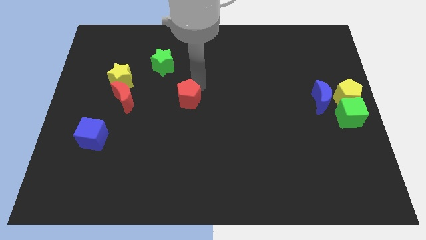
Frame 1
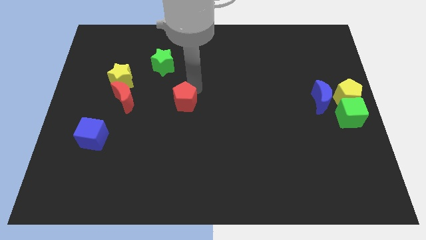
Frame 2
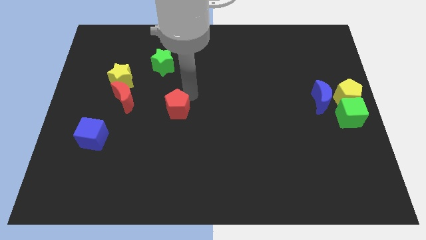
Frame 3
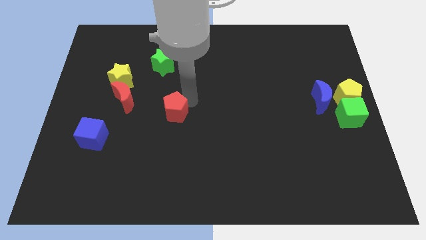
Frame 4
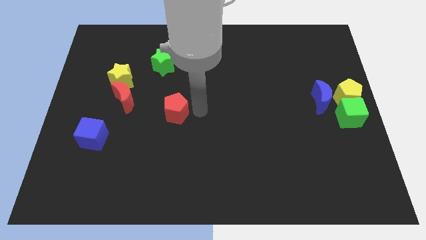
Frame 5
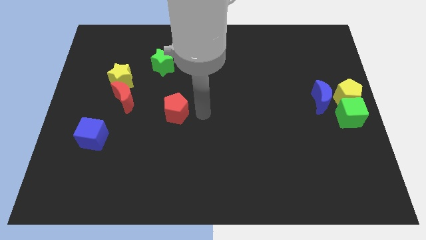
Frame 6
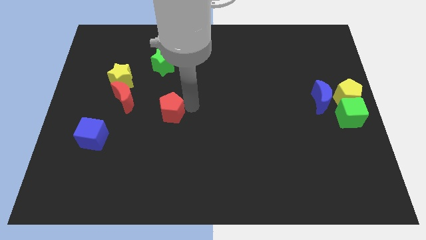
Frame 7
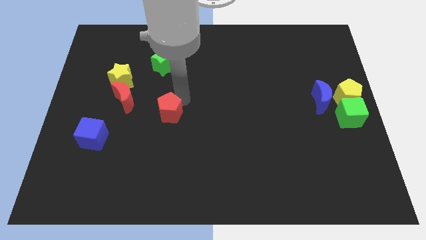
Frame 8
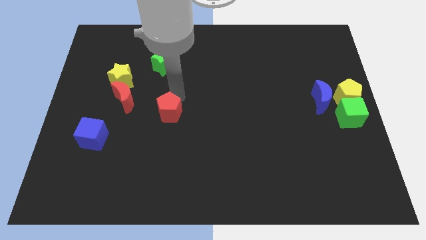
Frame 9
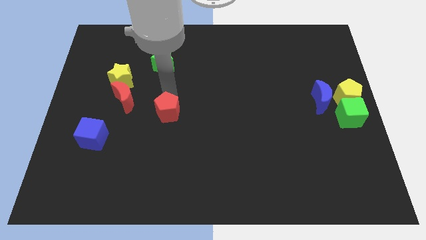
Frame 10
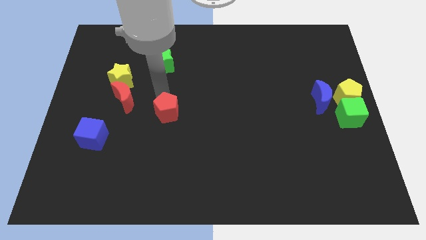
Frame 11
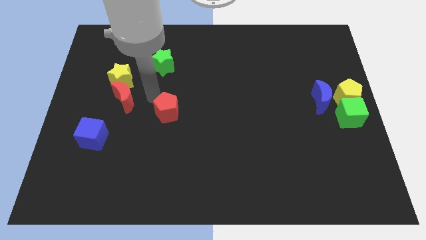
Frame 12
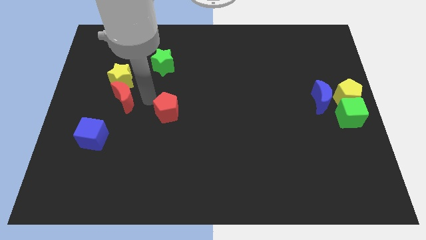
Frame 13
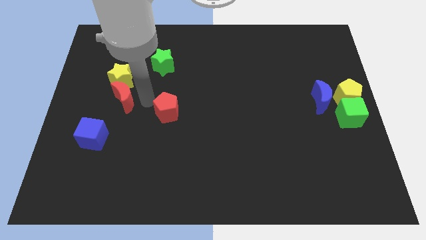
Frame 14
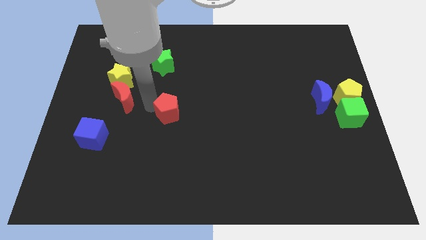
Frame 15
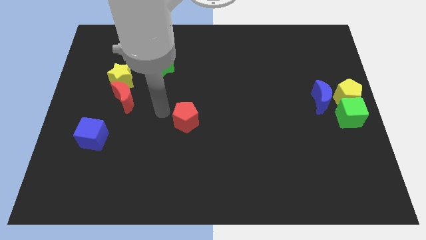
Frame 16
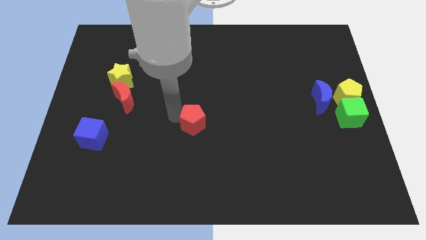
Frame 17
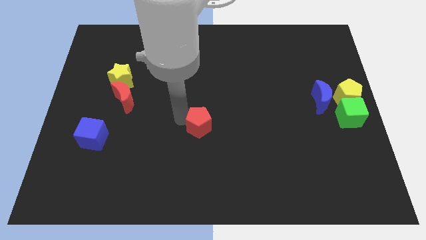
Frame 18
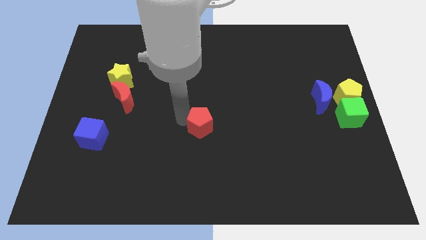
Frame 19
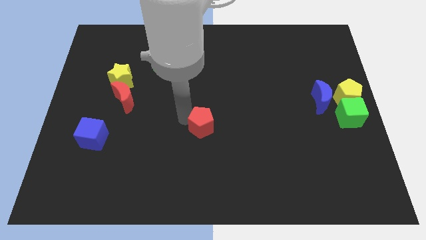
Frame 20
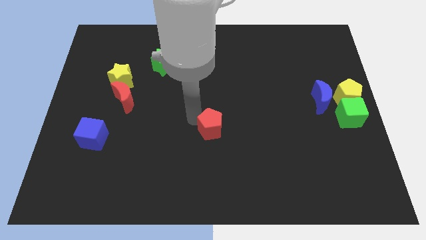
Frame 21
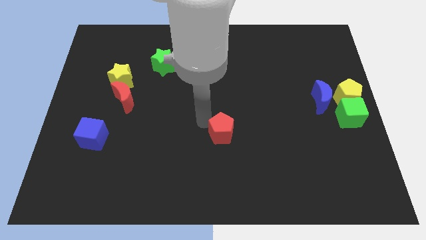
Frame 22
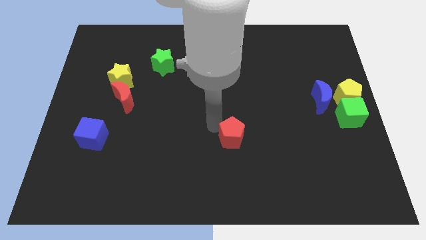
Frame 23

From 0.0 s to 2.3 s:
move the red pentagon to the right side of the board

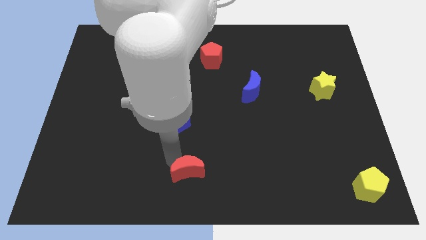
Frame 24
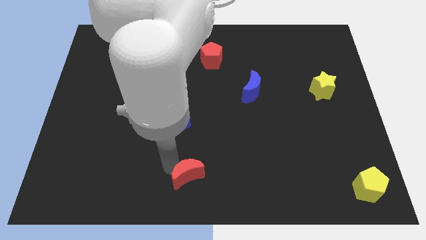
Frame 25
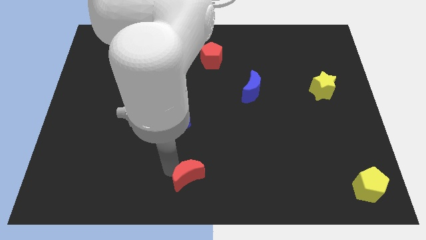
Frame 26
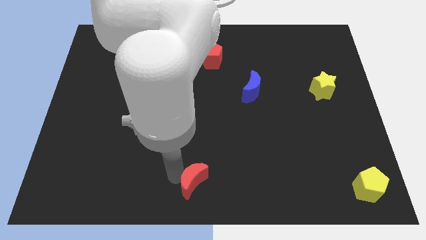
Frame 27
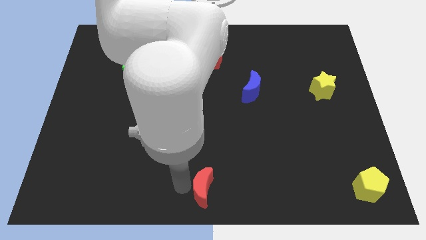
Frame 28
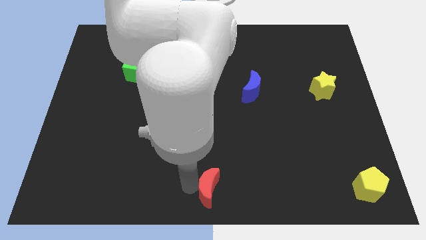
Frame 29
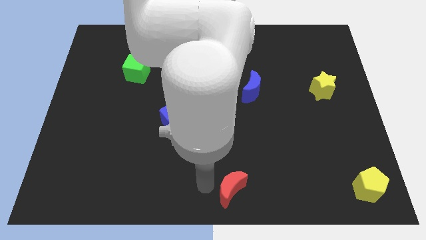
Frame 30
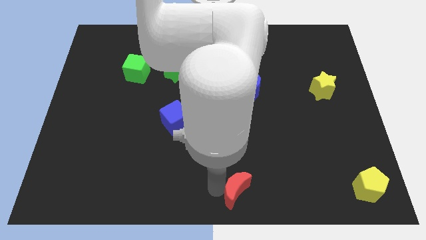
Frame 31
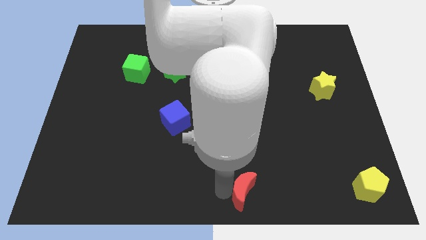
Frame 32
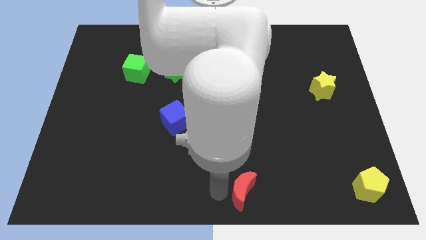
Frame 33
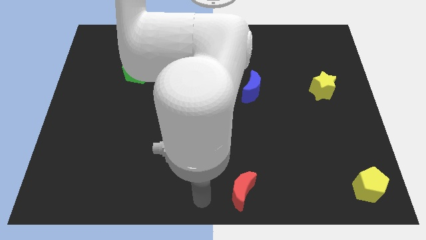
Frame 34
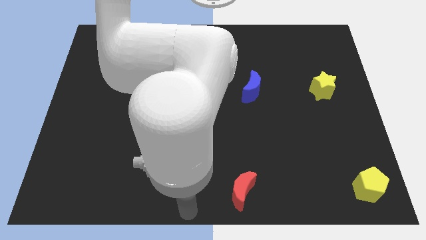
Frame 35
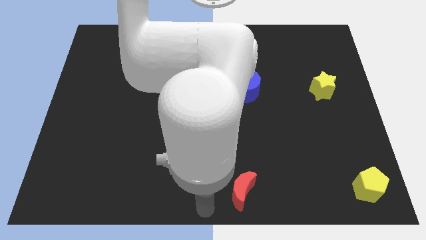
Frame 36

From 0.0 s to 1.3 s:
move the red moon to the bottom center

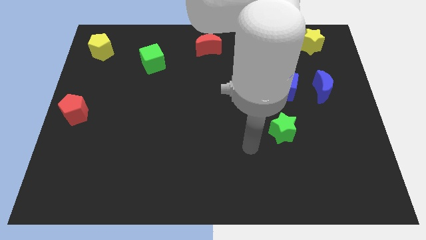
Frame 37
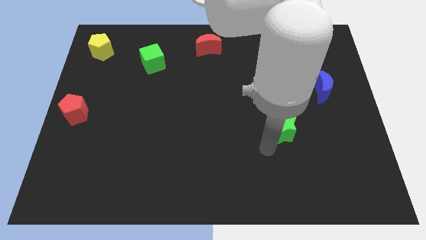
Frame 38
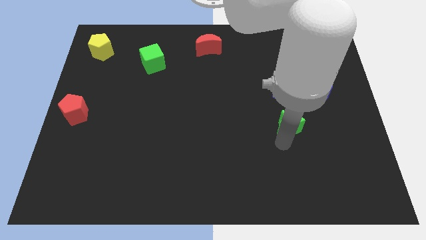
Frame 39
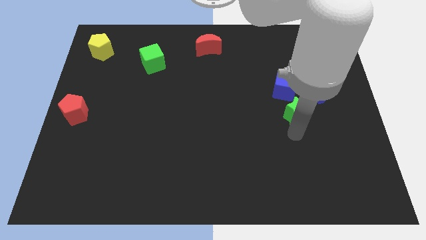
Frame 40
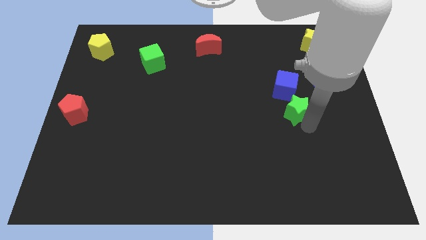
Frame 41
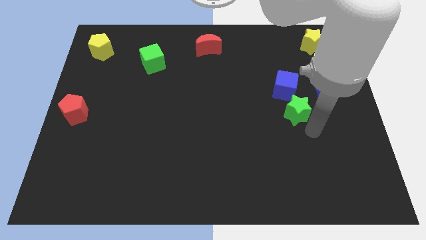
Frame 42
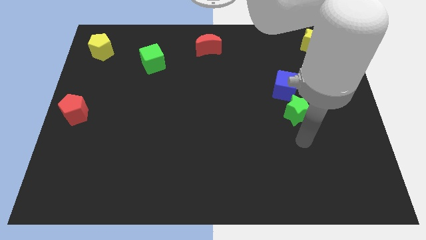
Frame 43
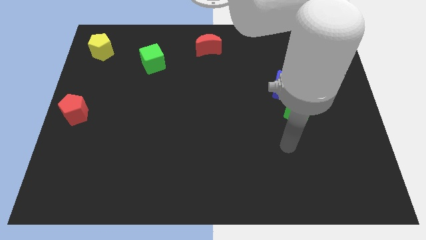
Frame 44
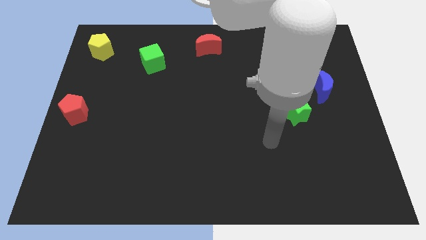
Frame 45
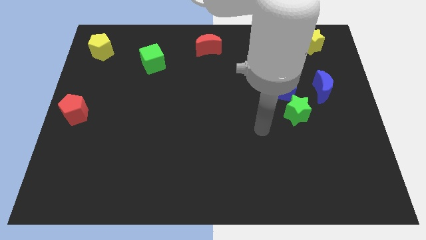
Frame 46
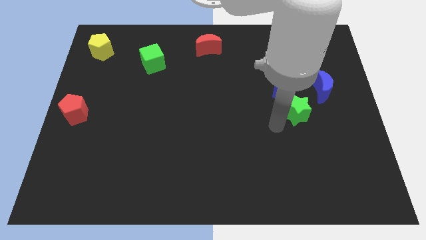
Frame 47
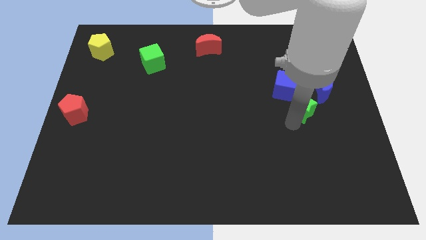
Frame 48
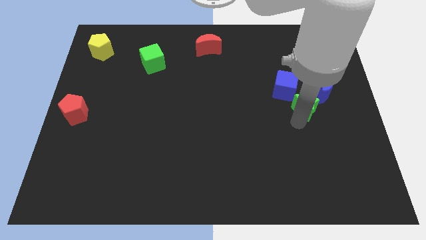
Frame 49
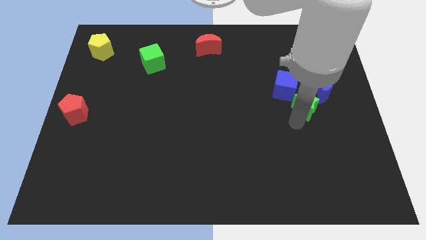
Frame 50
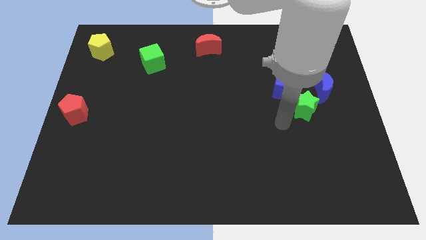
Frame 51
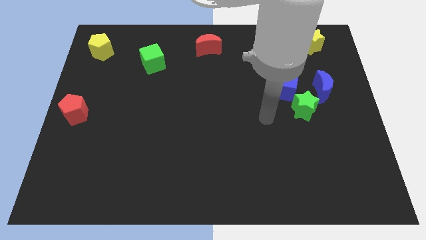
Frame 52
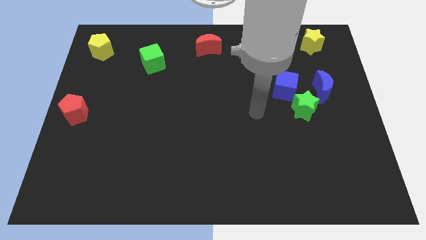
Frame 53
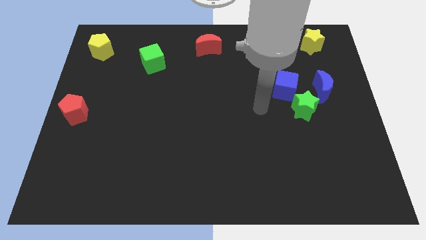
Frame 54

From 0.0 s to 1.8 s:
move the green star towards the blue cube

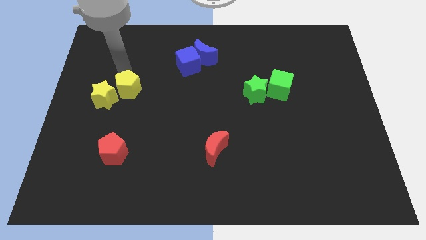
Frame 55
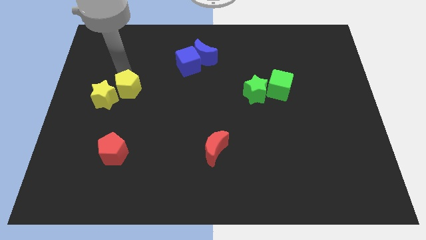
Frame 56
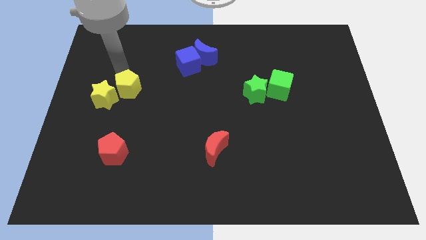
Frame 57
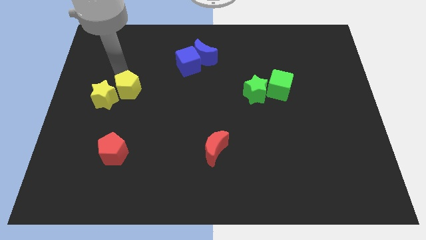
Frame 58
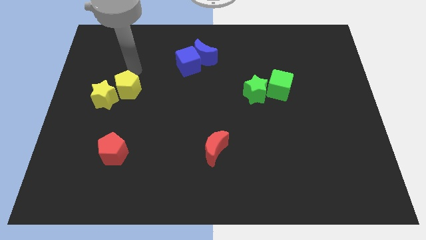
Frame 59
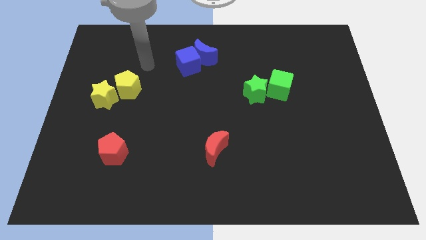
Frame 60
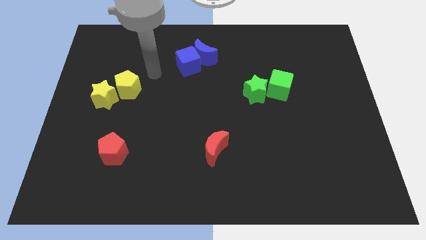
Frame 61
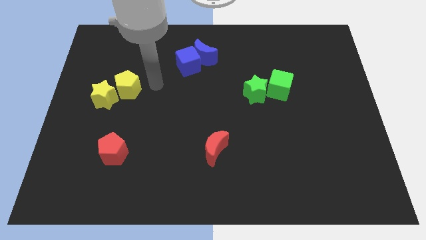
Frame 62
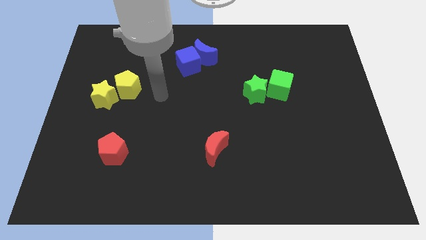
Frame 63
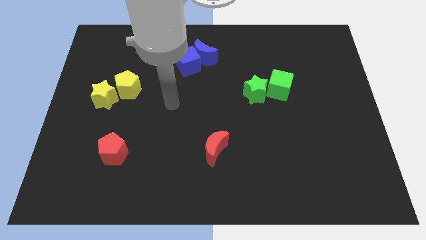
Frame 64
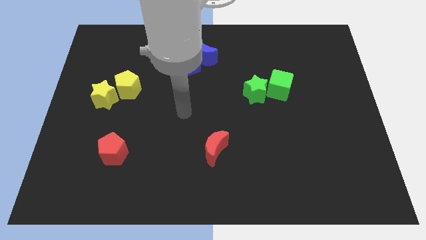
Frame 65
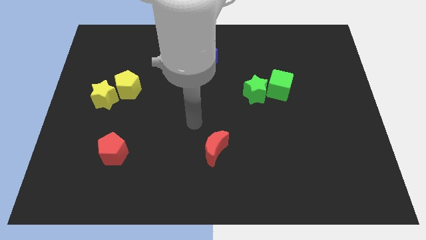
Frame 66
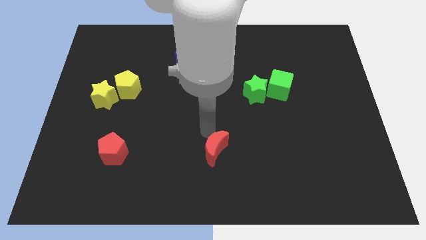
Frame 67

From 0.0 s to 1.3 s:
put the arm above the red crescent

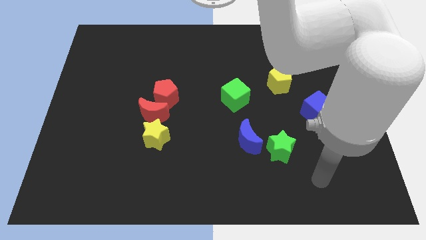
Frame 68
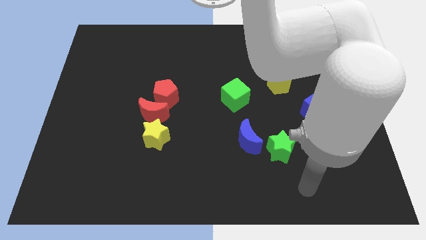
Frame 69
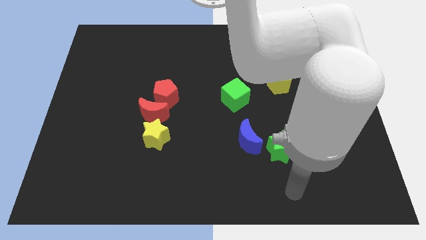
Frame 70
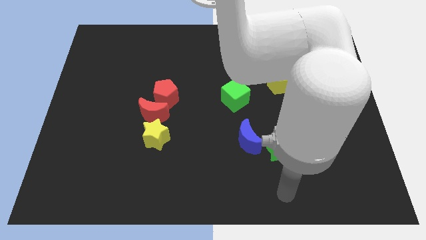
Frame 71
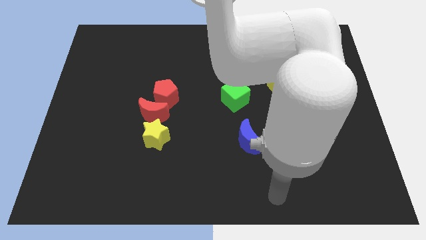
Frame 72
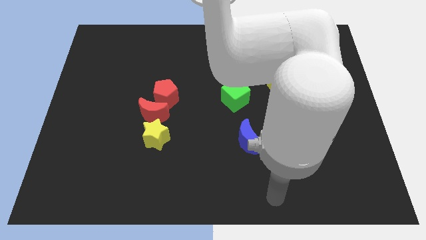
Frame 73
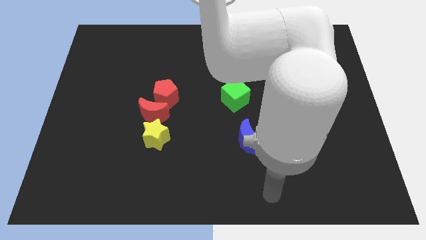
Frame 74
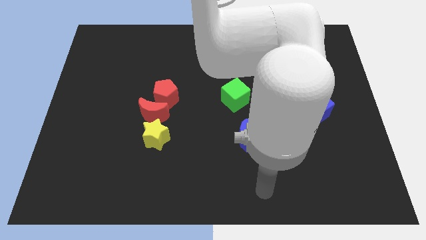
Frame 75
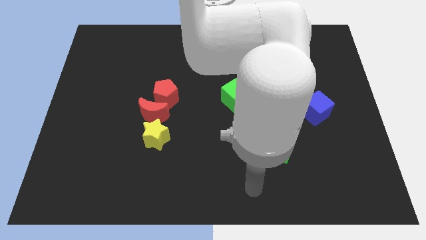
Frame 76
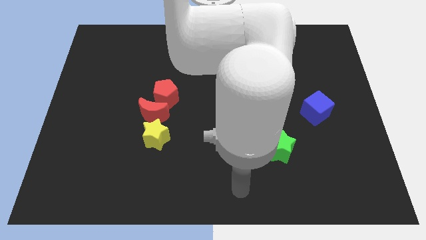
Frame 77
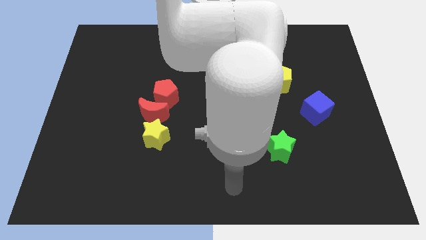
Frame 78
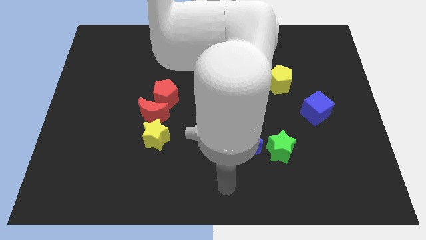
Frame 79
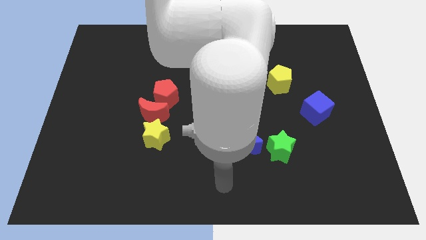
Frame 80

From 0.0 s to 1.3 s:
move your arm slightly to the left

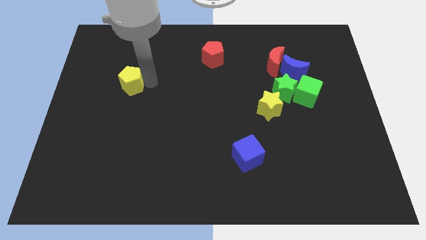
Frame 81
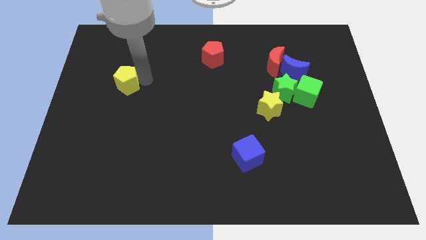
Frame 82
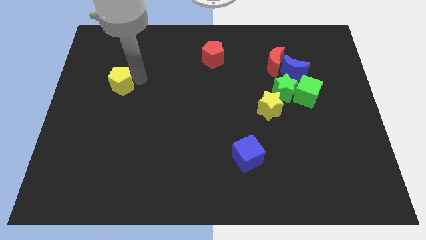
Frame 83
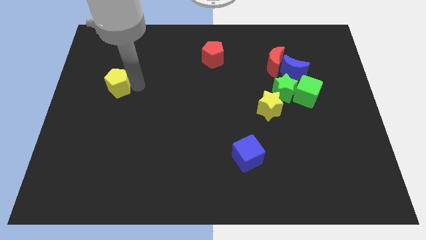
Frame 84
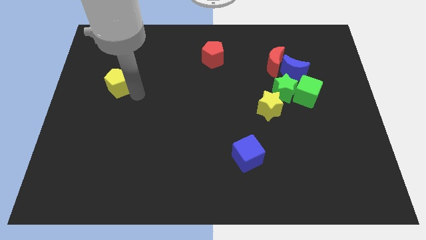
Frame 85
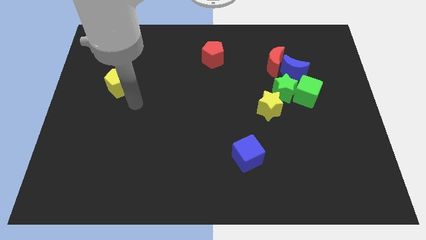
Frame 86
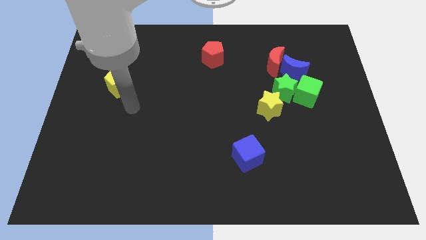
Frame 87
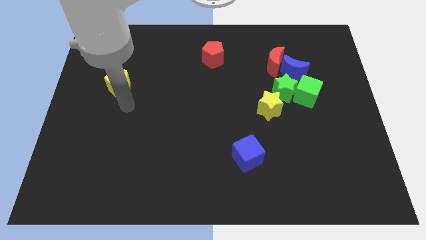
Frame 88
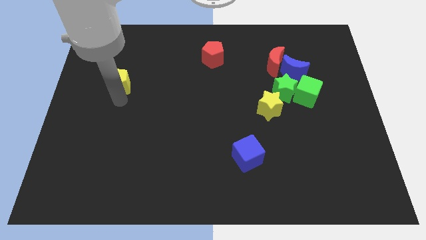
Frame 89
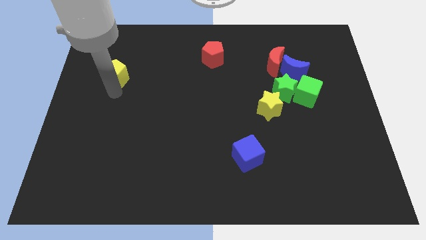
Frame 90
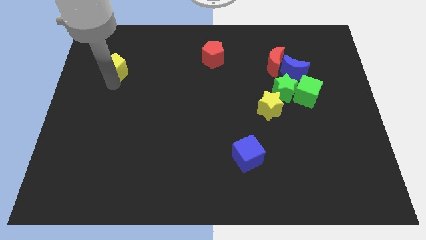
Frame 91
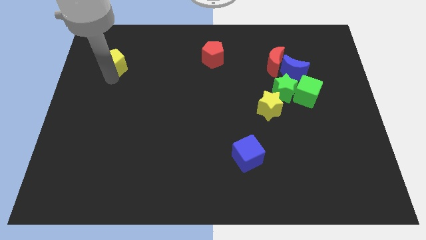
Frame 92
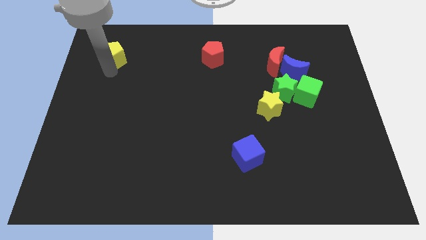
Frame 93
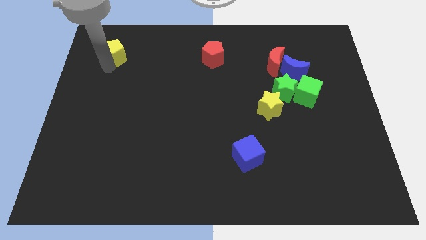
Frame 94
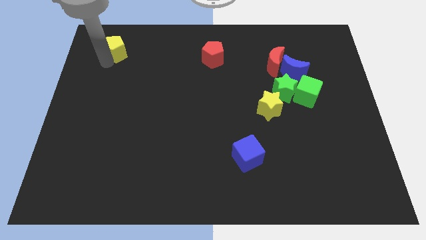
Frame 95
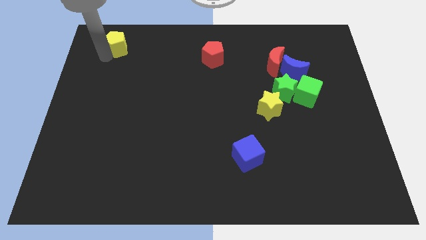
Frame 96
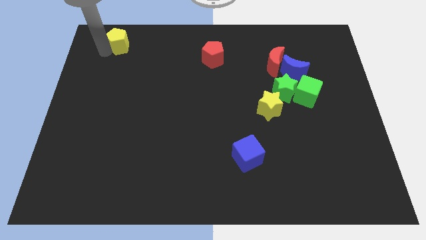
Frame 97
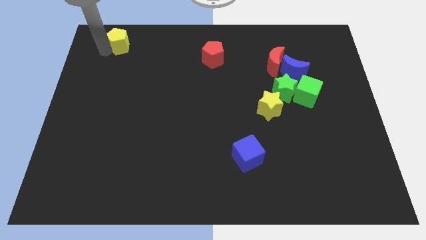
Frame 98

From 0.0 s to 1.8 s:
place yellow pentagon to the top left corner of the board
